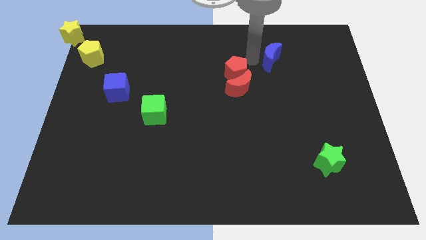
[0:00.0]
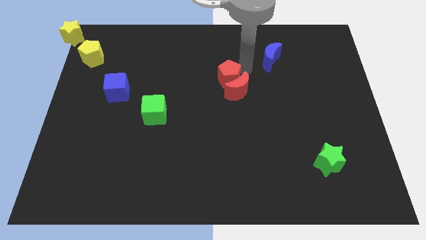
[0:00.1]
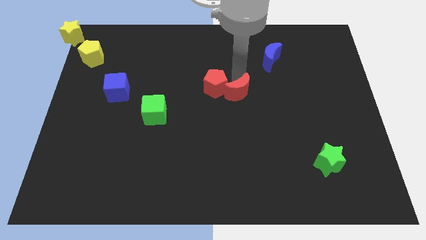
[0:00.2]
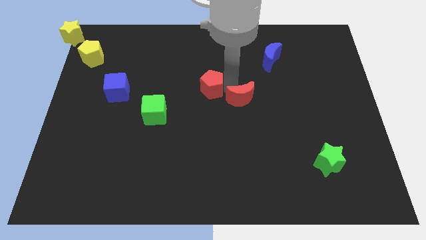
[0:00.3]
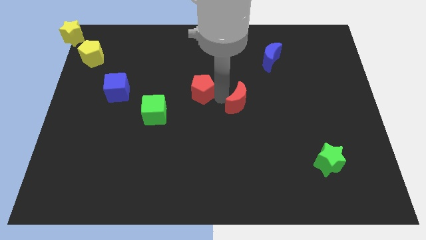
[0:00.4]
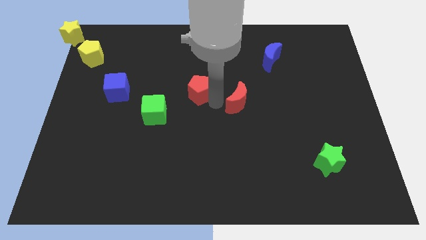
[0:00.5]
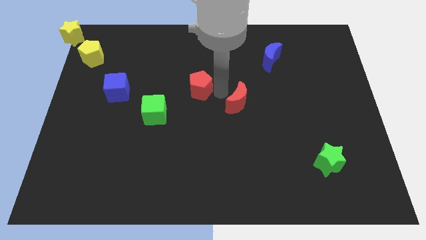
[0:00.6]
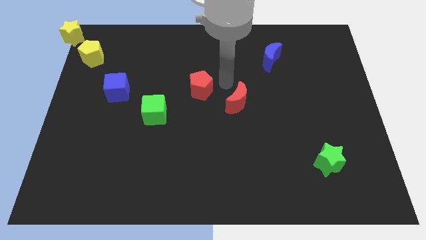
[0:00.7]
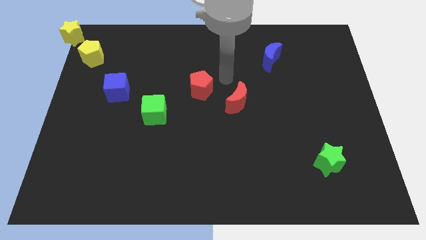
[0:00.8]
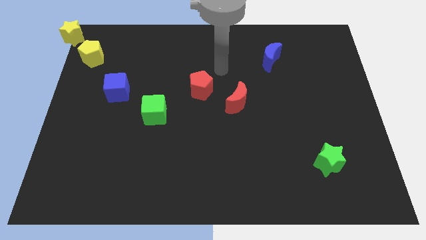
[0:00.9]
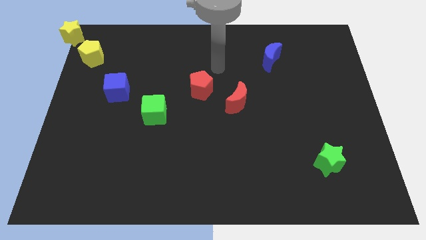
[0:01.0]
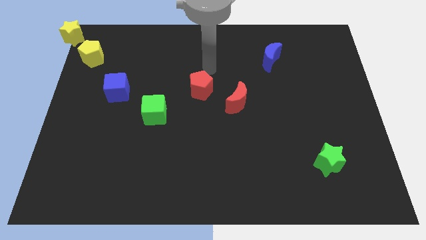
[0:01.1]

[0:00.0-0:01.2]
separate the red pentagon and the red crescent

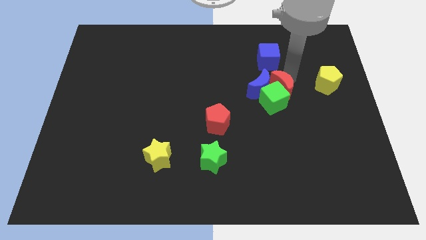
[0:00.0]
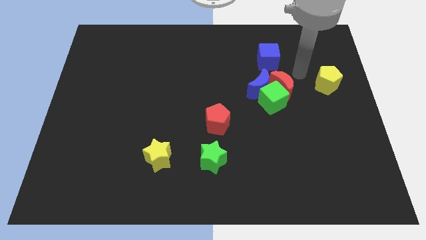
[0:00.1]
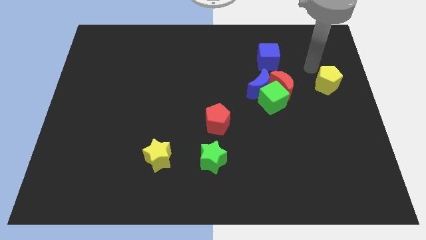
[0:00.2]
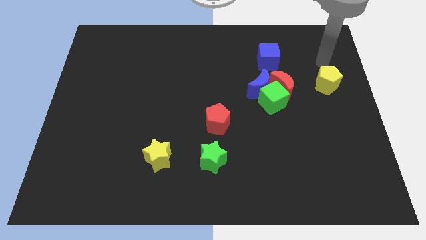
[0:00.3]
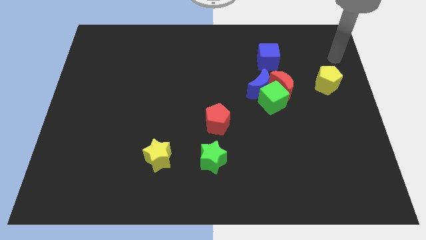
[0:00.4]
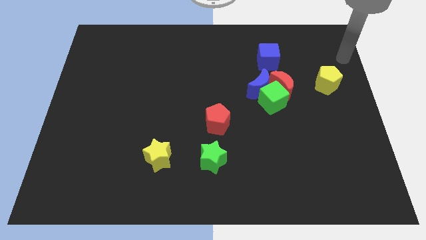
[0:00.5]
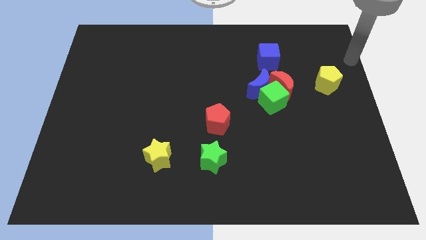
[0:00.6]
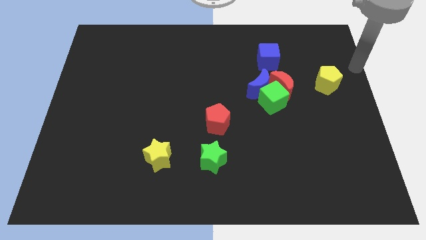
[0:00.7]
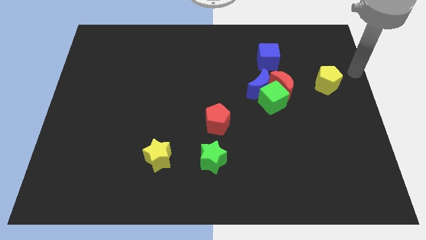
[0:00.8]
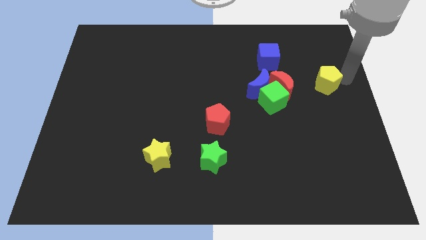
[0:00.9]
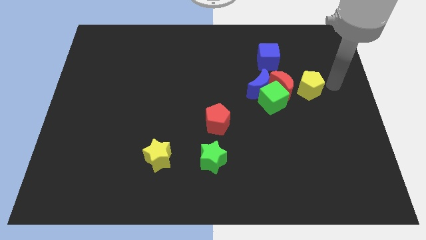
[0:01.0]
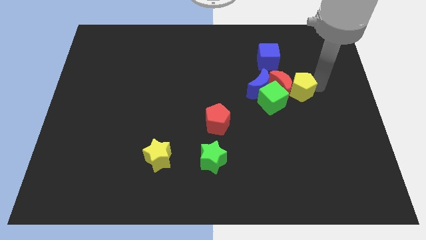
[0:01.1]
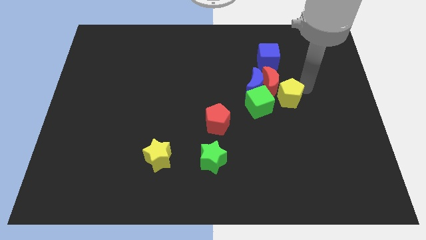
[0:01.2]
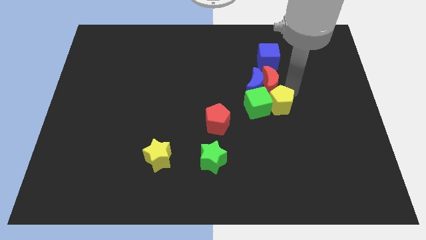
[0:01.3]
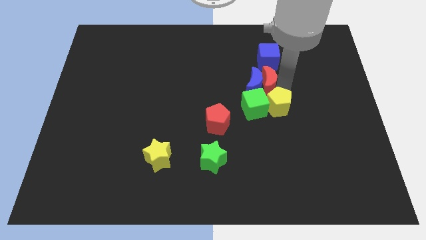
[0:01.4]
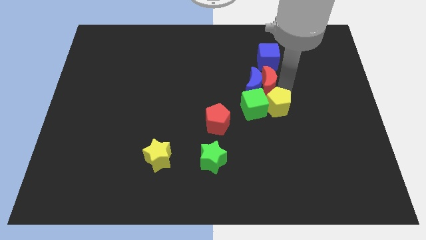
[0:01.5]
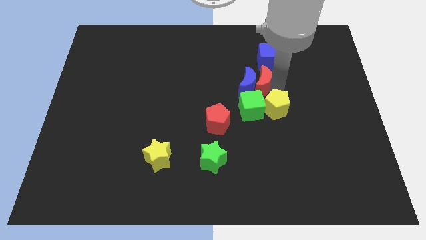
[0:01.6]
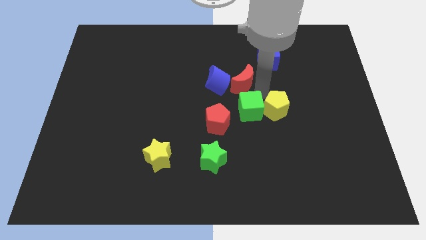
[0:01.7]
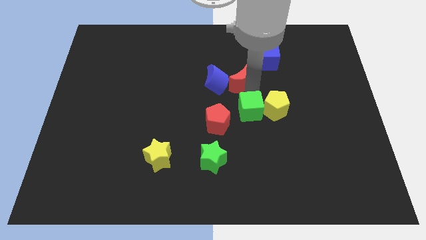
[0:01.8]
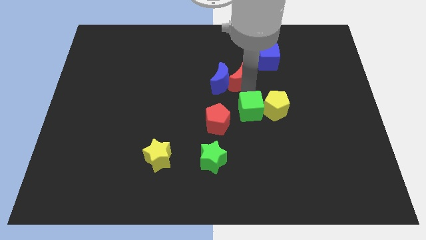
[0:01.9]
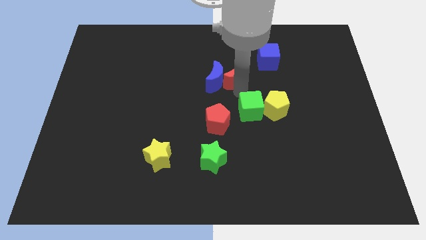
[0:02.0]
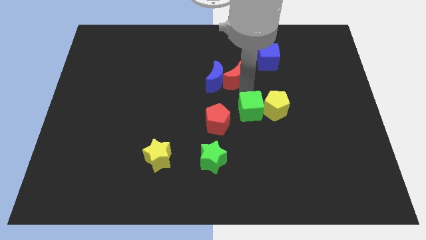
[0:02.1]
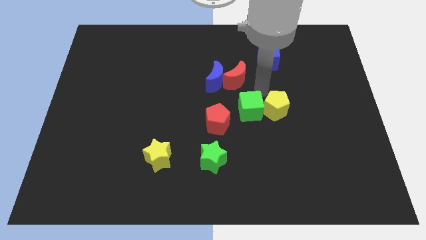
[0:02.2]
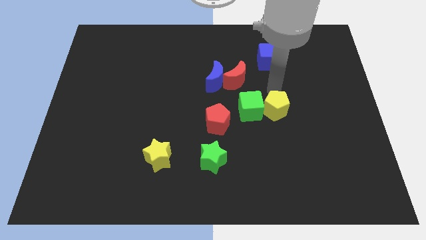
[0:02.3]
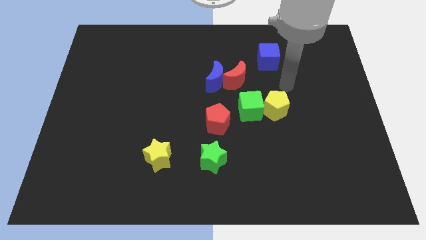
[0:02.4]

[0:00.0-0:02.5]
place yellow pentagon to the right of green cube

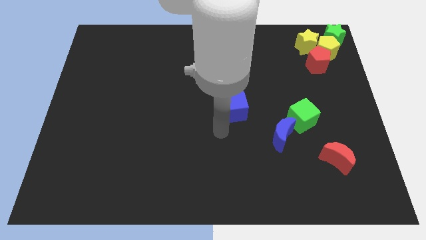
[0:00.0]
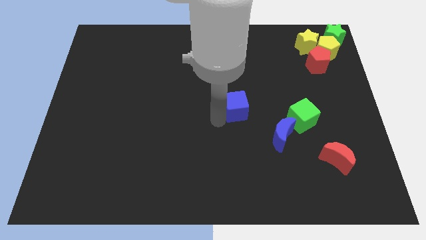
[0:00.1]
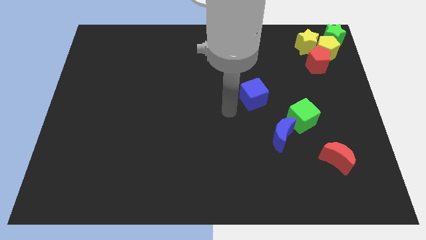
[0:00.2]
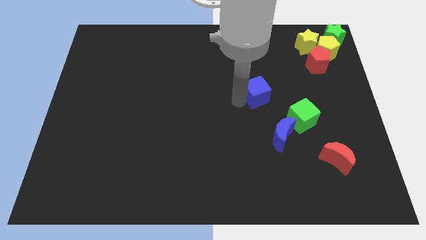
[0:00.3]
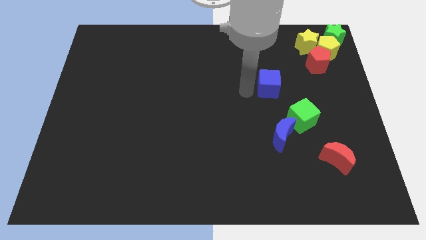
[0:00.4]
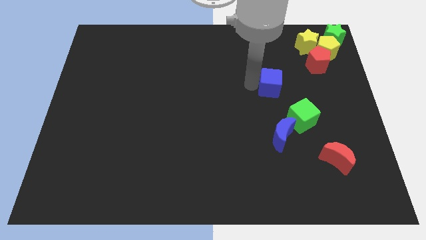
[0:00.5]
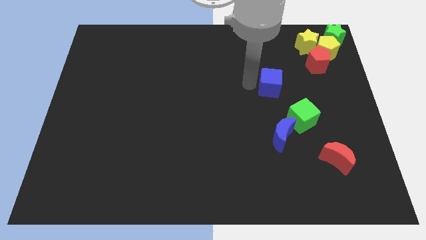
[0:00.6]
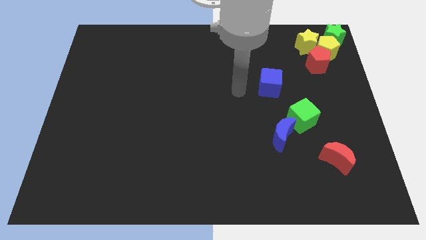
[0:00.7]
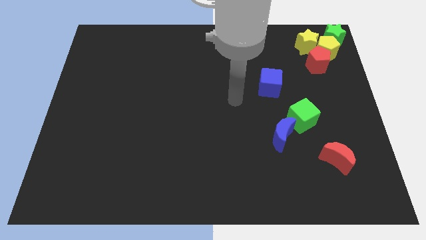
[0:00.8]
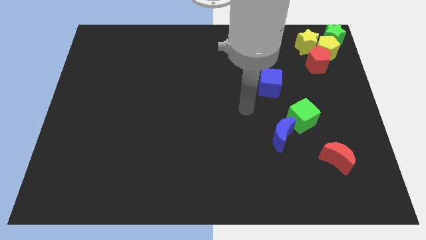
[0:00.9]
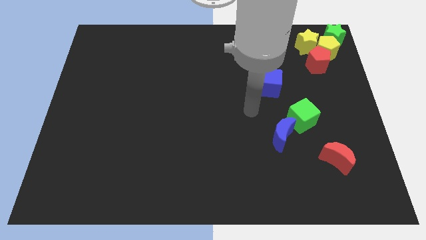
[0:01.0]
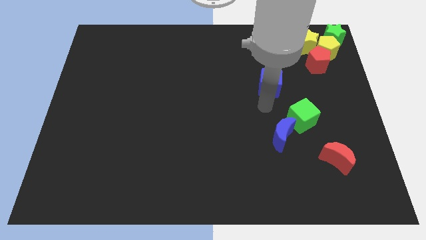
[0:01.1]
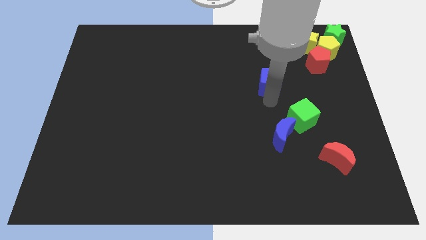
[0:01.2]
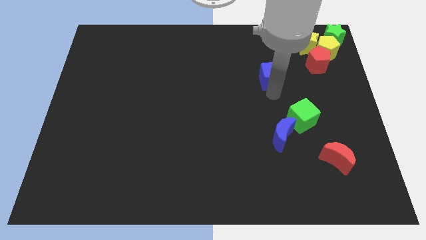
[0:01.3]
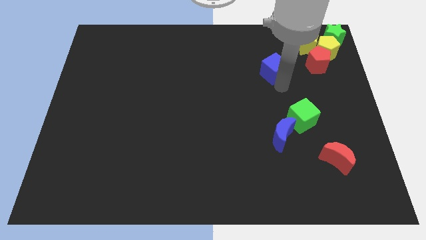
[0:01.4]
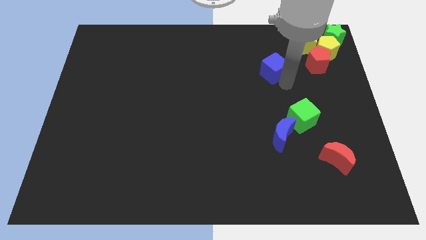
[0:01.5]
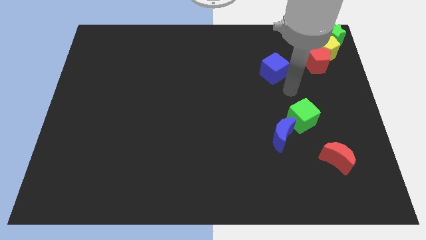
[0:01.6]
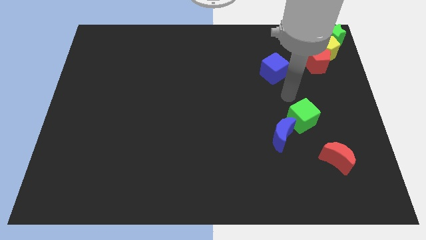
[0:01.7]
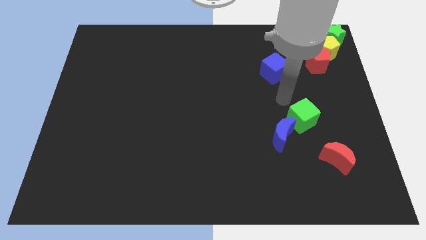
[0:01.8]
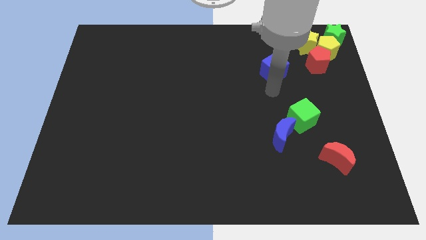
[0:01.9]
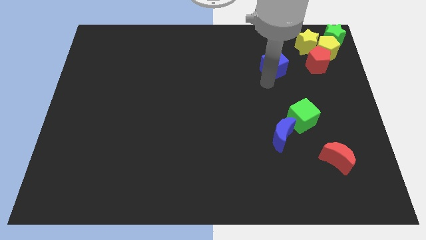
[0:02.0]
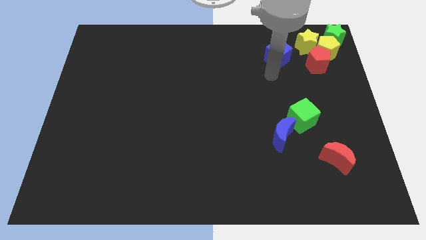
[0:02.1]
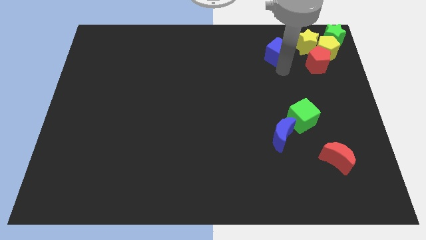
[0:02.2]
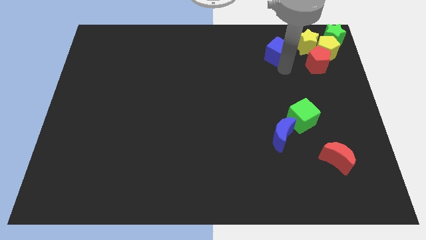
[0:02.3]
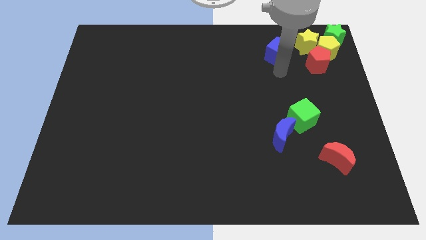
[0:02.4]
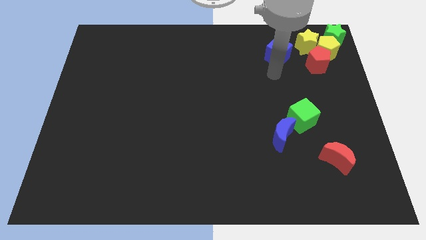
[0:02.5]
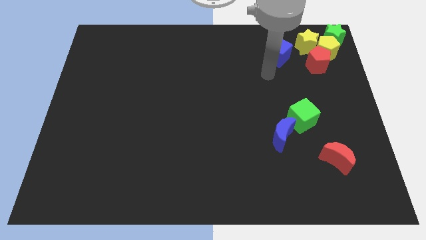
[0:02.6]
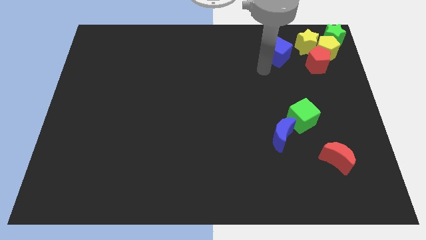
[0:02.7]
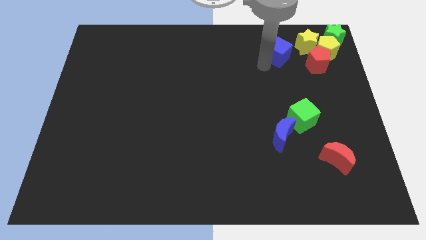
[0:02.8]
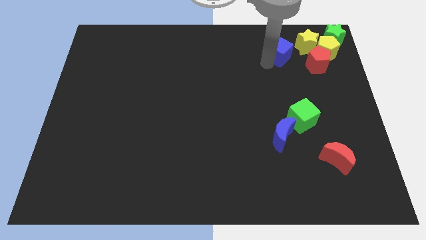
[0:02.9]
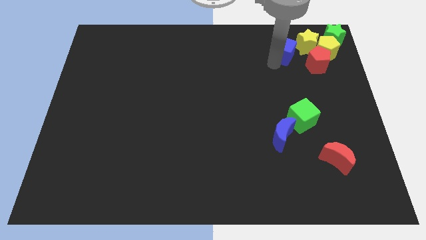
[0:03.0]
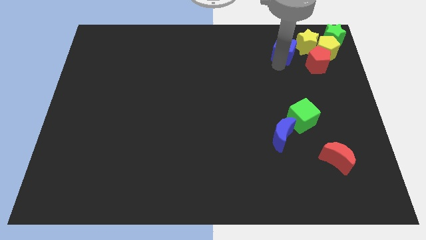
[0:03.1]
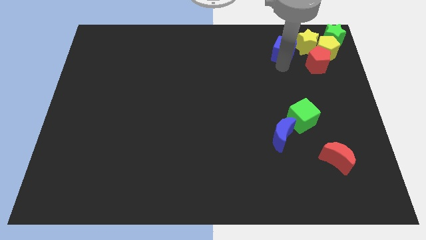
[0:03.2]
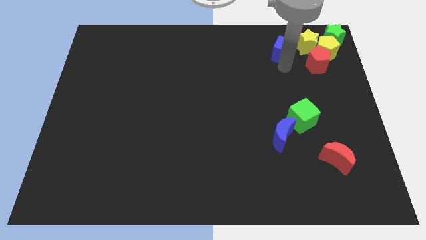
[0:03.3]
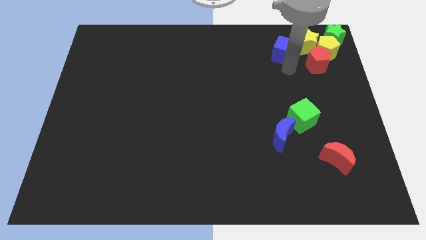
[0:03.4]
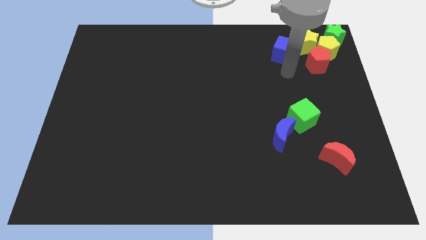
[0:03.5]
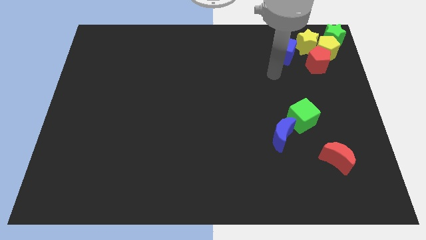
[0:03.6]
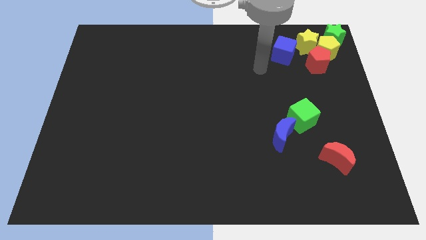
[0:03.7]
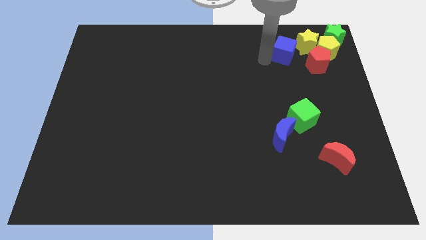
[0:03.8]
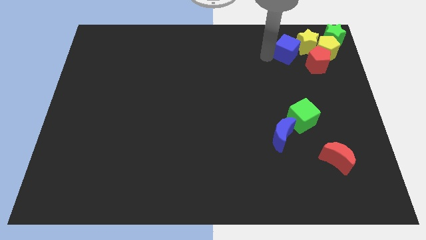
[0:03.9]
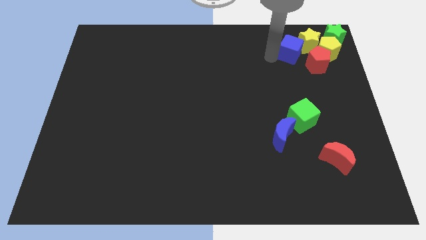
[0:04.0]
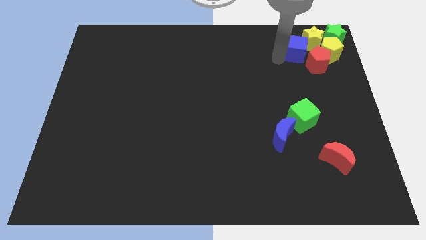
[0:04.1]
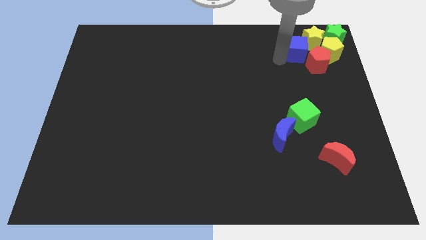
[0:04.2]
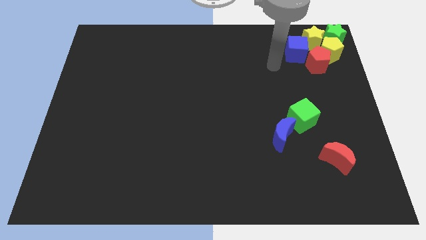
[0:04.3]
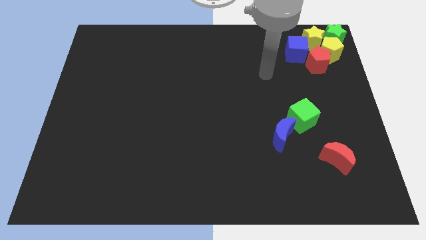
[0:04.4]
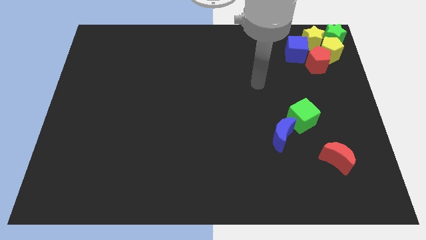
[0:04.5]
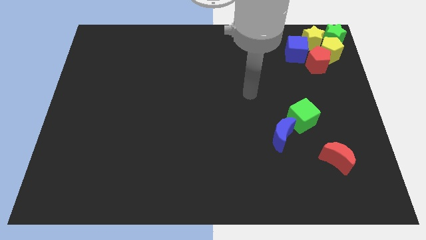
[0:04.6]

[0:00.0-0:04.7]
move the blue cube into the yellow star

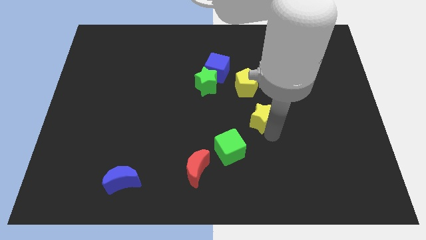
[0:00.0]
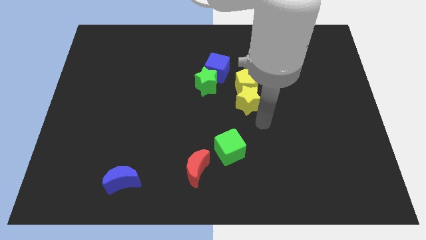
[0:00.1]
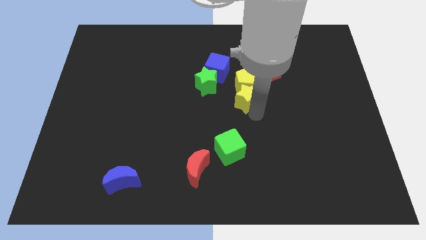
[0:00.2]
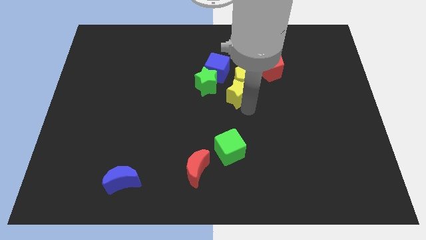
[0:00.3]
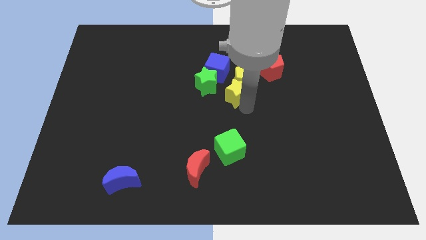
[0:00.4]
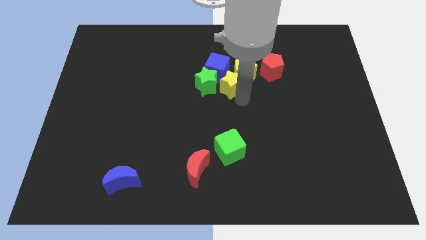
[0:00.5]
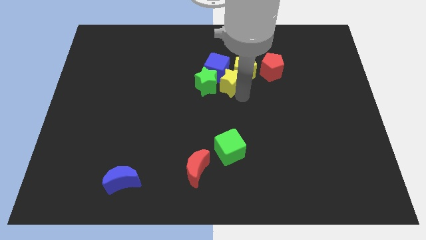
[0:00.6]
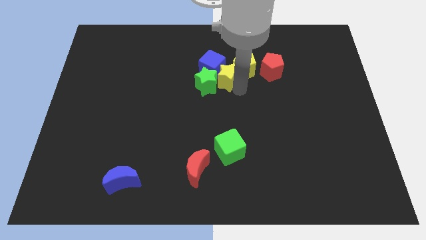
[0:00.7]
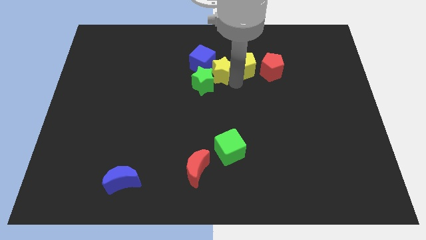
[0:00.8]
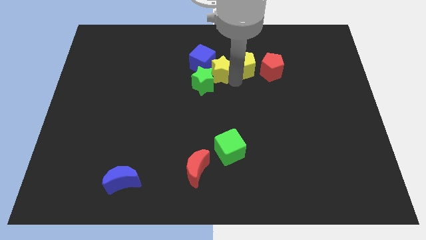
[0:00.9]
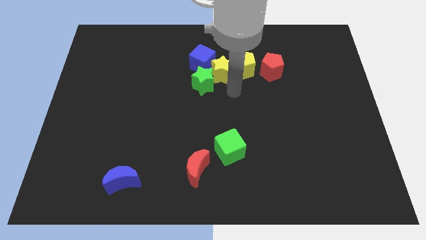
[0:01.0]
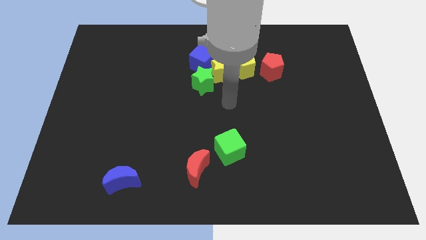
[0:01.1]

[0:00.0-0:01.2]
push the yellow star into the right side of the blue cube
